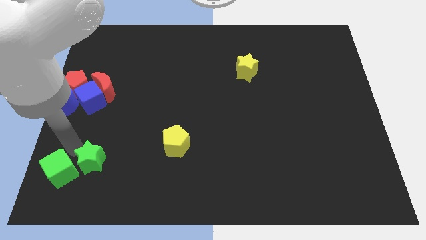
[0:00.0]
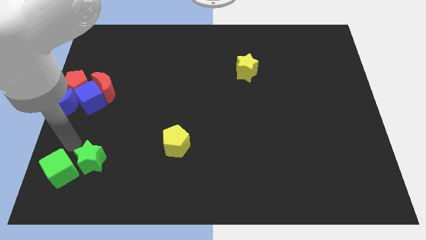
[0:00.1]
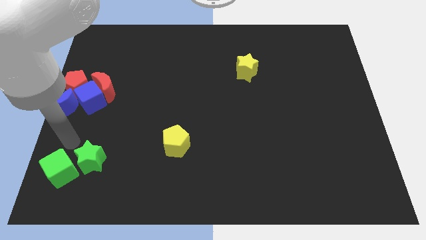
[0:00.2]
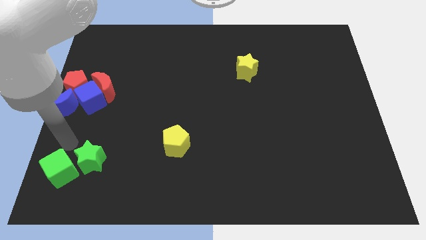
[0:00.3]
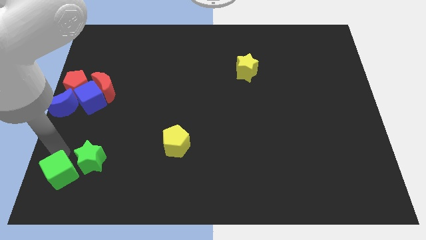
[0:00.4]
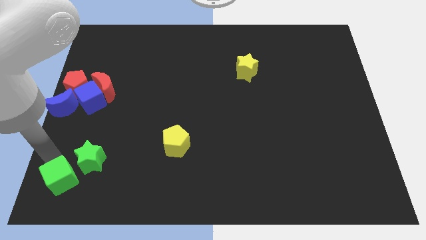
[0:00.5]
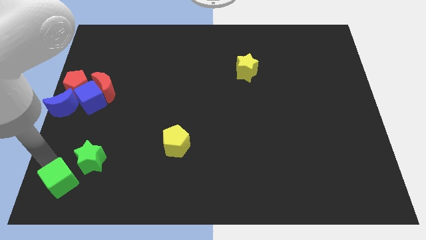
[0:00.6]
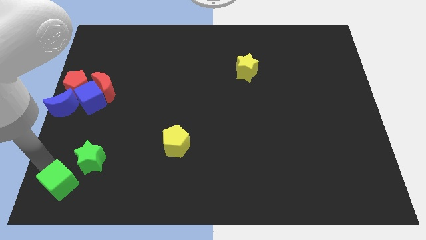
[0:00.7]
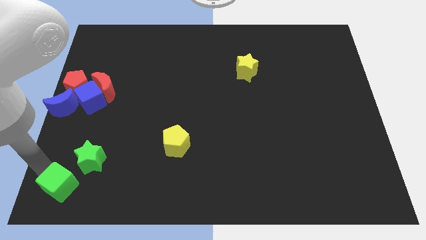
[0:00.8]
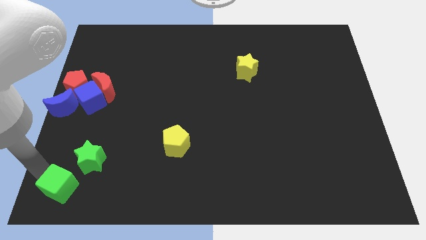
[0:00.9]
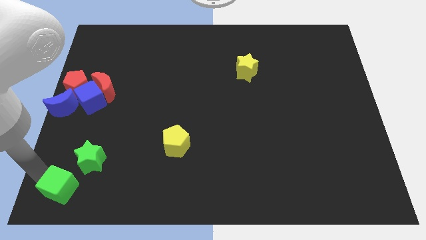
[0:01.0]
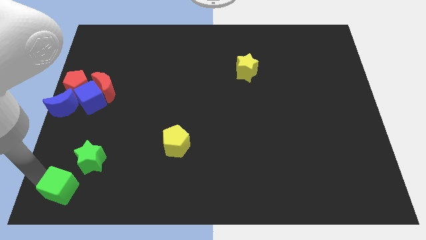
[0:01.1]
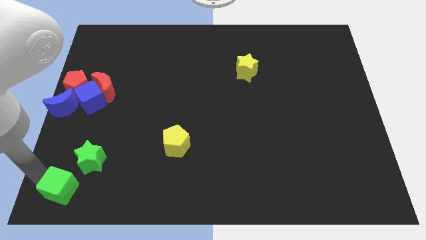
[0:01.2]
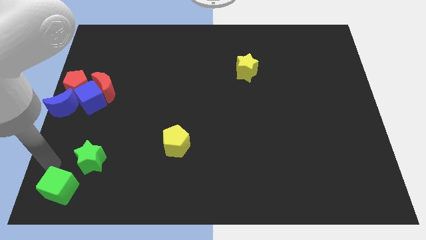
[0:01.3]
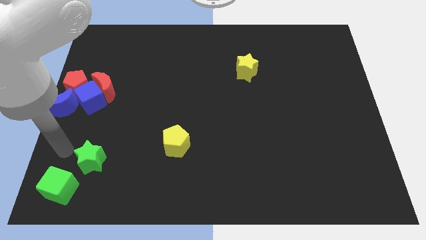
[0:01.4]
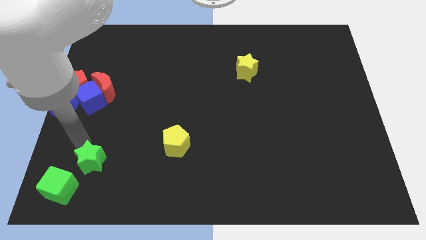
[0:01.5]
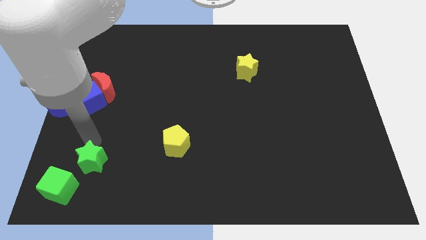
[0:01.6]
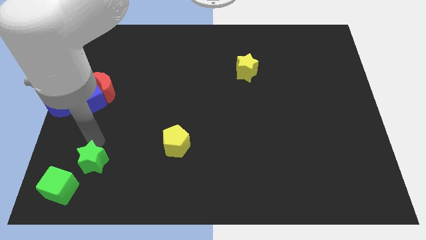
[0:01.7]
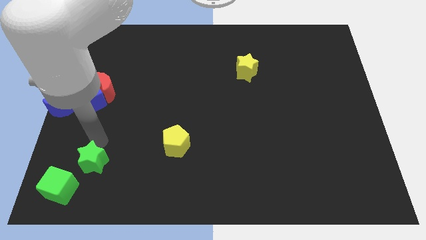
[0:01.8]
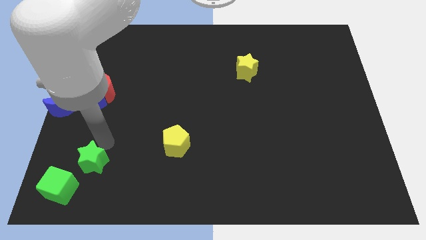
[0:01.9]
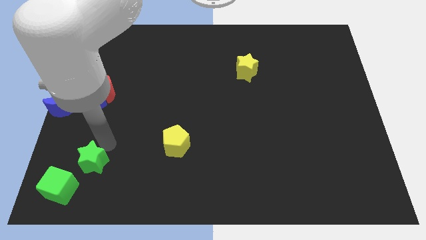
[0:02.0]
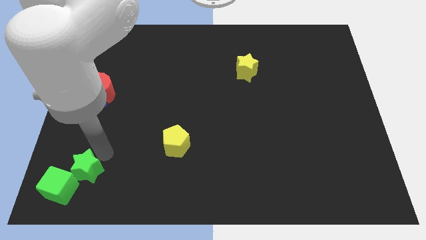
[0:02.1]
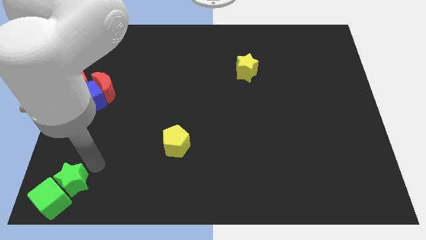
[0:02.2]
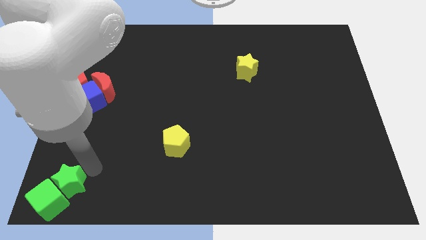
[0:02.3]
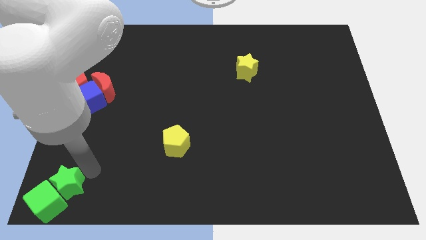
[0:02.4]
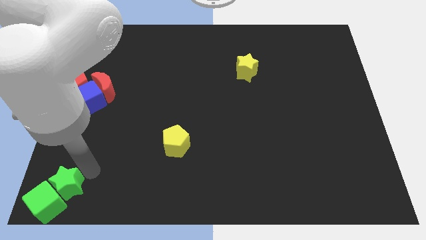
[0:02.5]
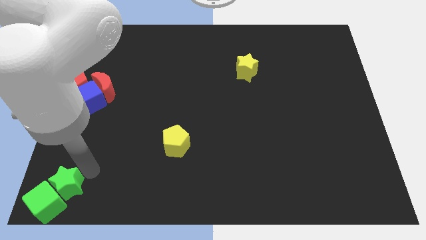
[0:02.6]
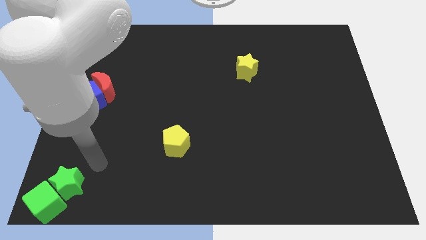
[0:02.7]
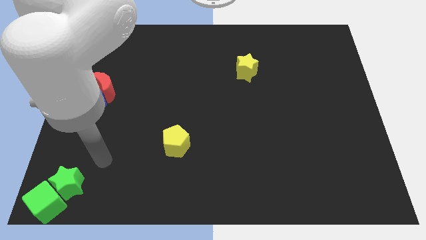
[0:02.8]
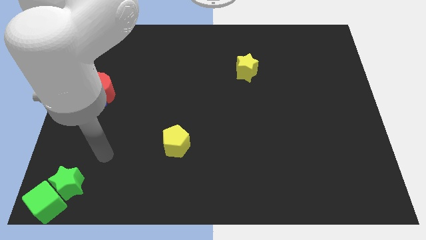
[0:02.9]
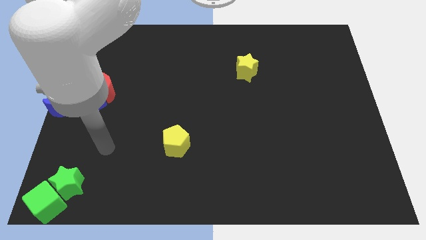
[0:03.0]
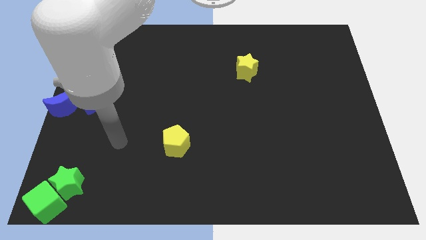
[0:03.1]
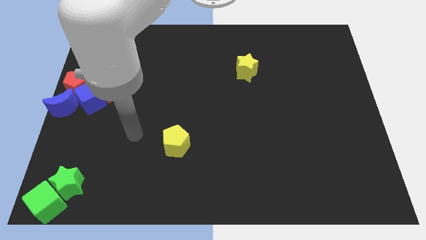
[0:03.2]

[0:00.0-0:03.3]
move the green blocks at the bottom left corner of the board

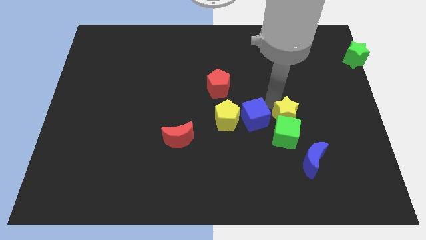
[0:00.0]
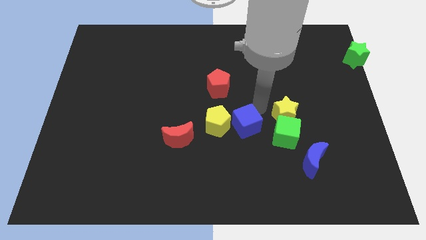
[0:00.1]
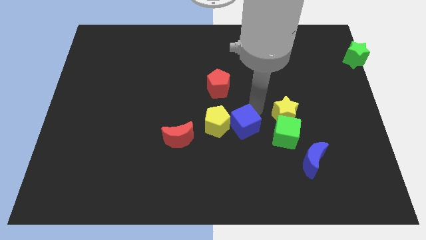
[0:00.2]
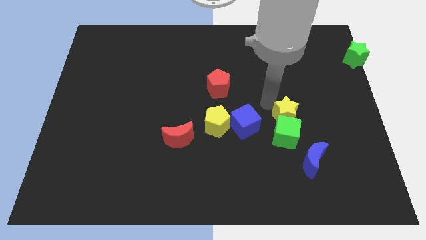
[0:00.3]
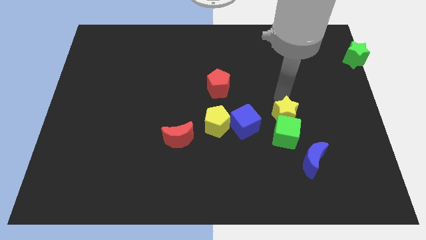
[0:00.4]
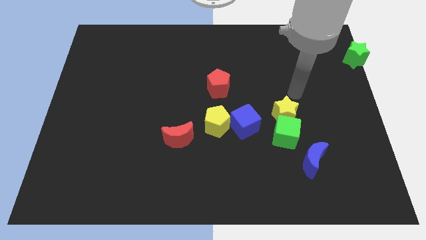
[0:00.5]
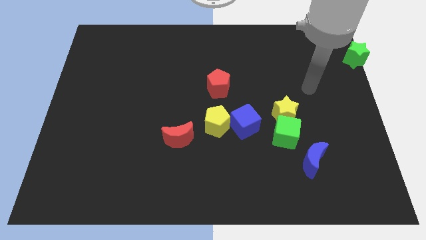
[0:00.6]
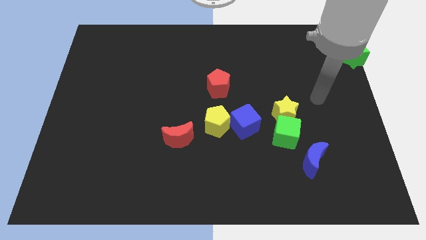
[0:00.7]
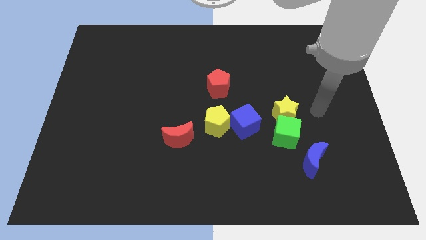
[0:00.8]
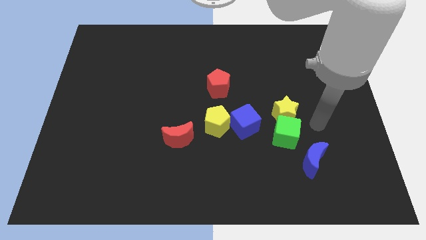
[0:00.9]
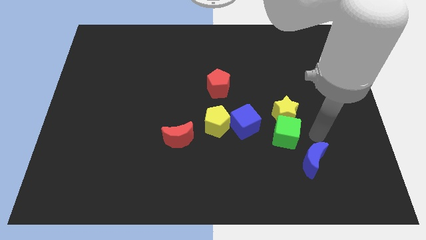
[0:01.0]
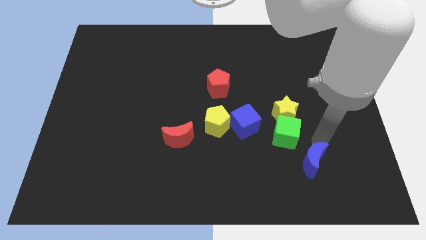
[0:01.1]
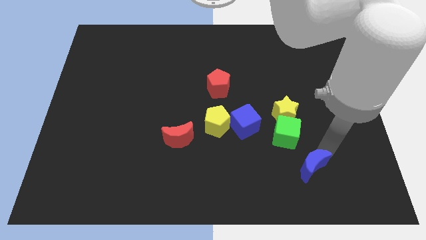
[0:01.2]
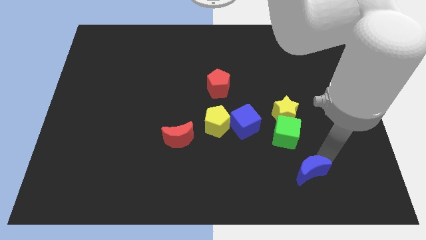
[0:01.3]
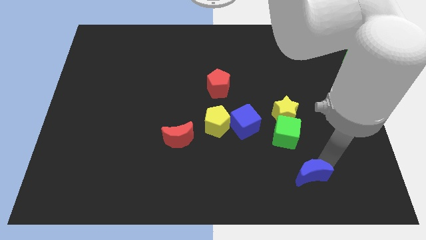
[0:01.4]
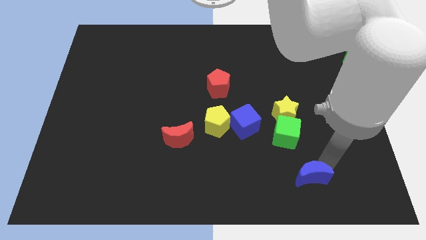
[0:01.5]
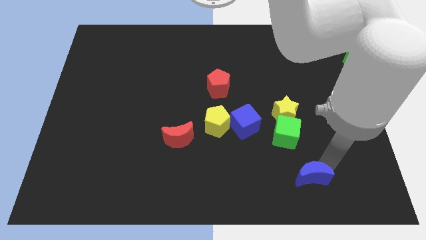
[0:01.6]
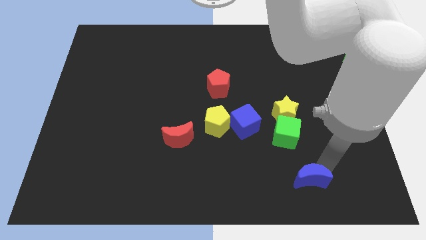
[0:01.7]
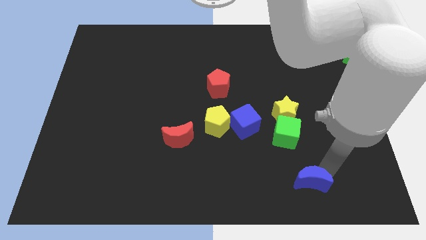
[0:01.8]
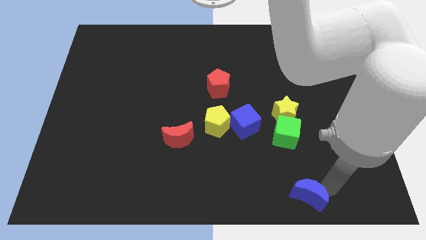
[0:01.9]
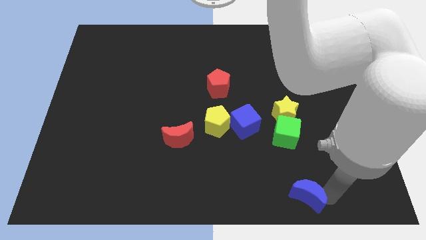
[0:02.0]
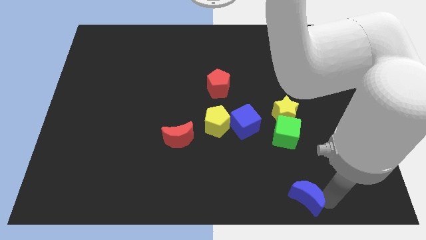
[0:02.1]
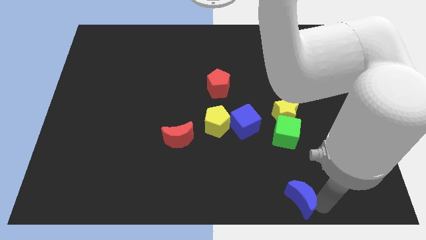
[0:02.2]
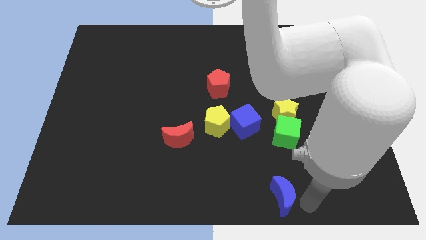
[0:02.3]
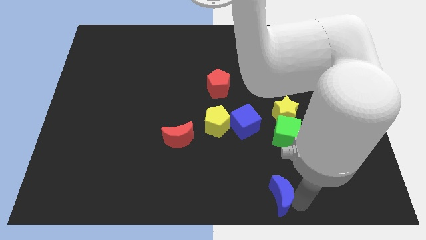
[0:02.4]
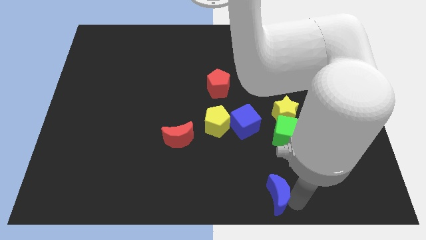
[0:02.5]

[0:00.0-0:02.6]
place the blue moon below the green cube

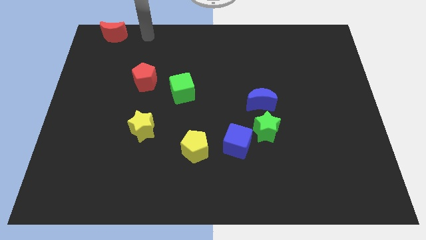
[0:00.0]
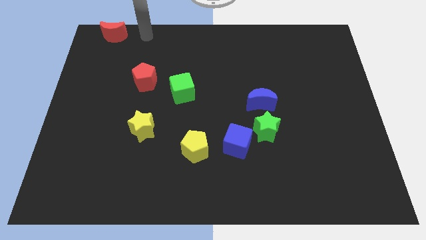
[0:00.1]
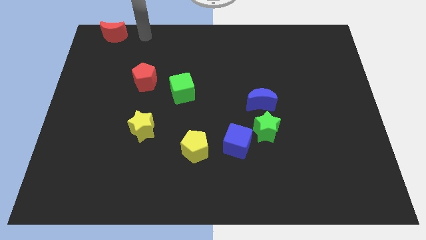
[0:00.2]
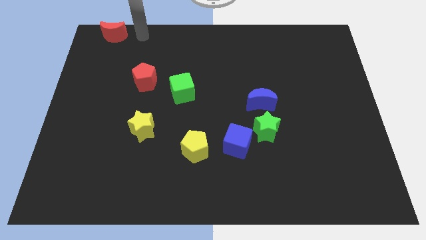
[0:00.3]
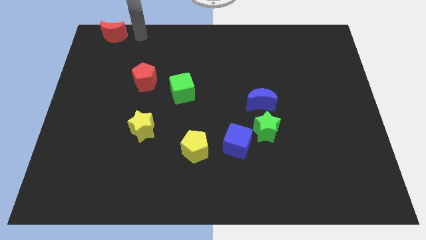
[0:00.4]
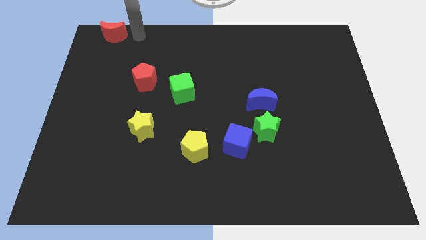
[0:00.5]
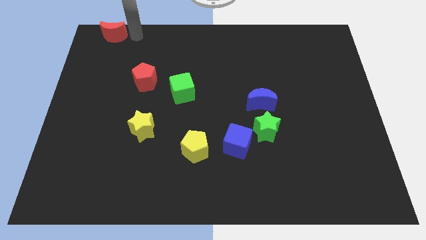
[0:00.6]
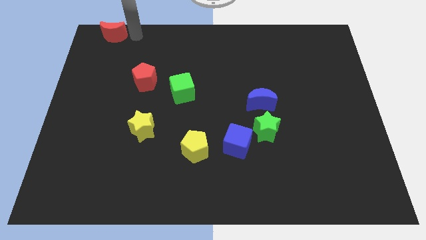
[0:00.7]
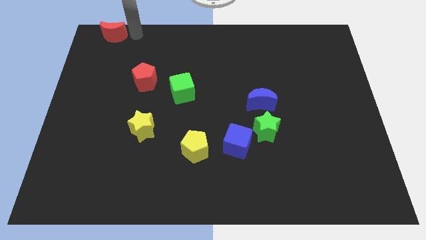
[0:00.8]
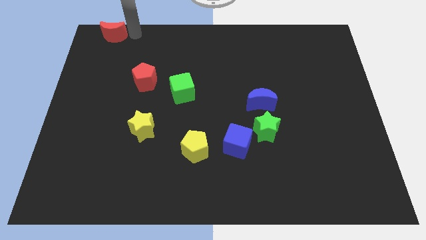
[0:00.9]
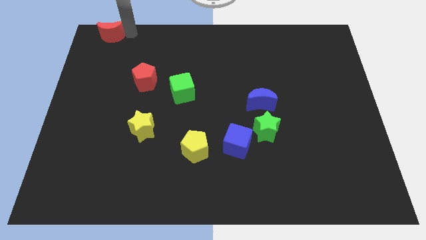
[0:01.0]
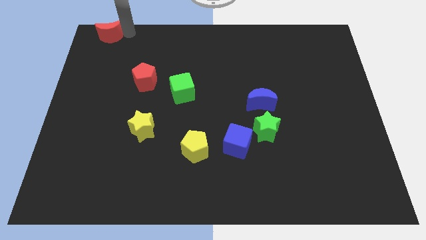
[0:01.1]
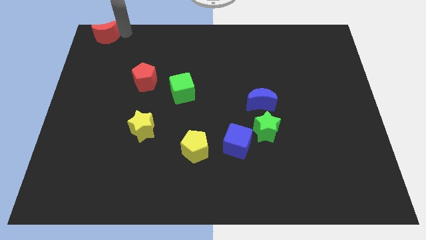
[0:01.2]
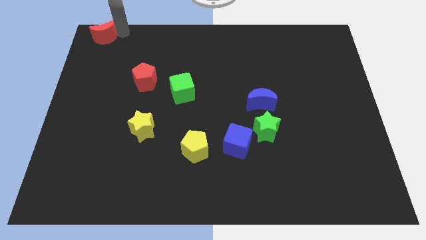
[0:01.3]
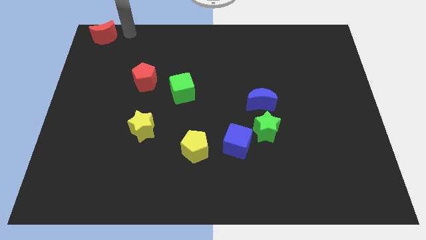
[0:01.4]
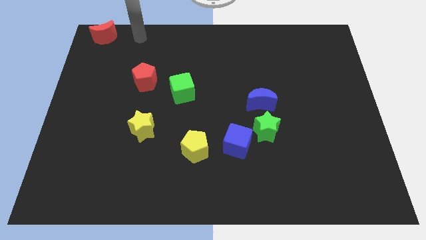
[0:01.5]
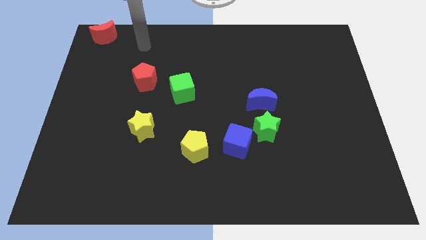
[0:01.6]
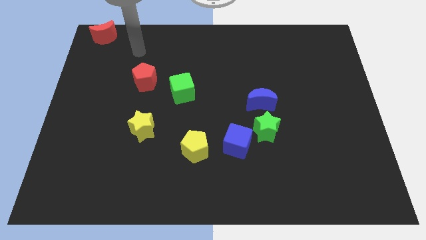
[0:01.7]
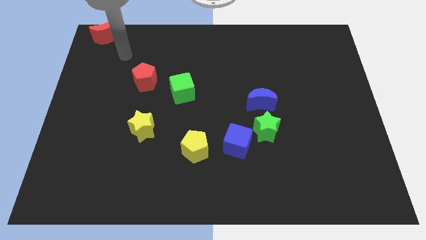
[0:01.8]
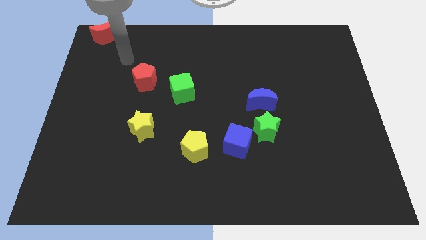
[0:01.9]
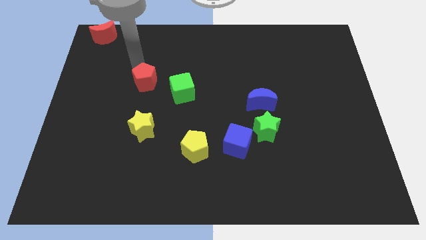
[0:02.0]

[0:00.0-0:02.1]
slide the red crescent to the top led corner

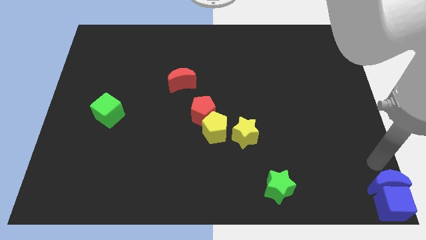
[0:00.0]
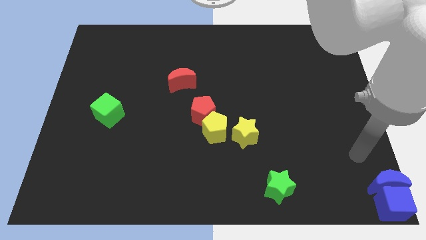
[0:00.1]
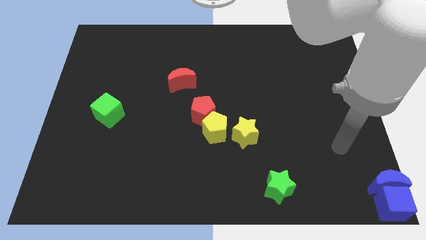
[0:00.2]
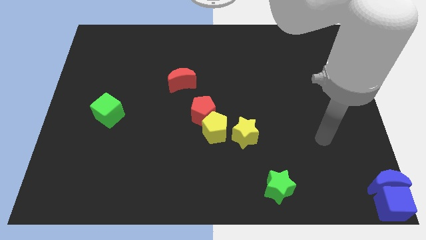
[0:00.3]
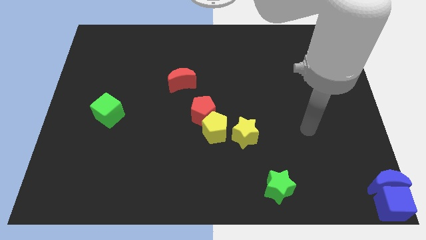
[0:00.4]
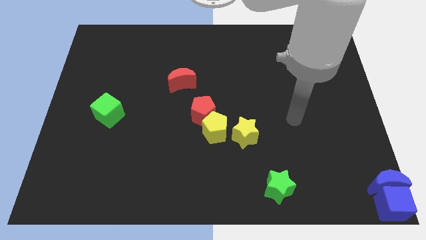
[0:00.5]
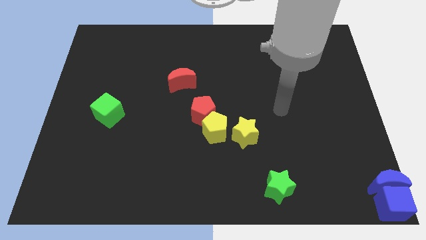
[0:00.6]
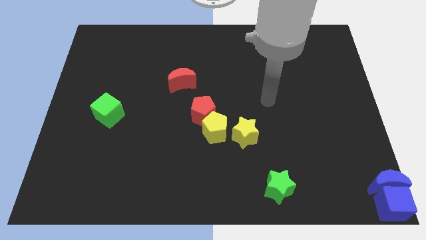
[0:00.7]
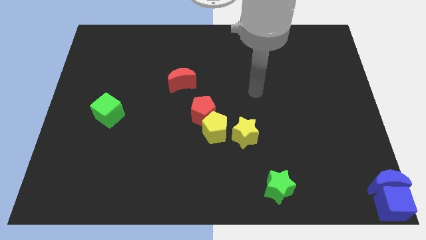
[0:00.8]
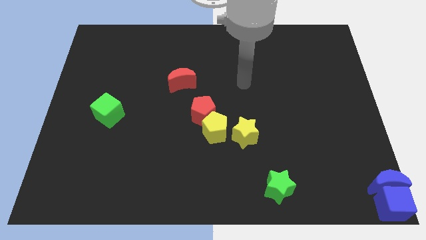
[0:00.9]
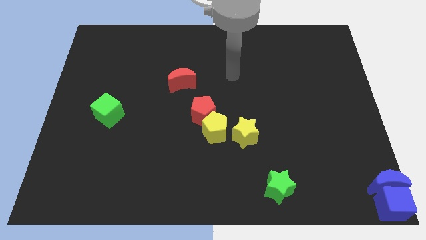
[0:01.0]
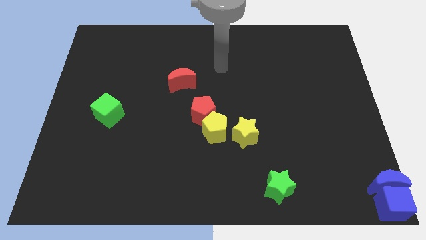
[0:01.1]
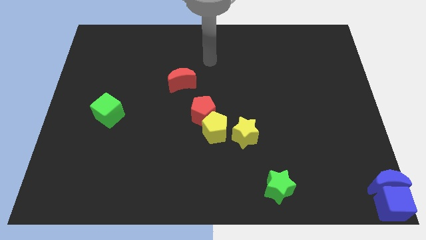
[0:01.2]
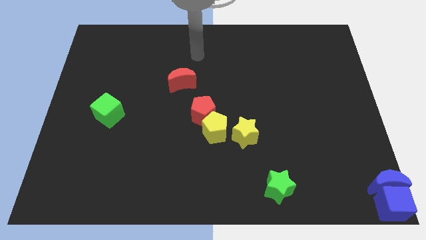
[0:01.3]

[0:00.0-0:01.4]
take away your arm away from blue moon
